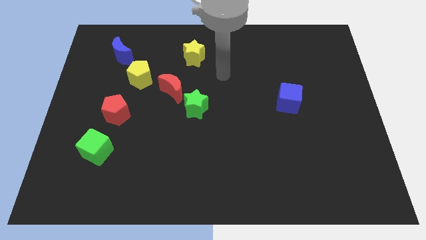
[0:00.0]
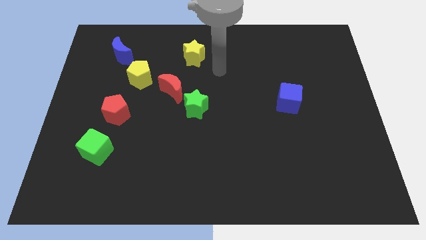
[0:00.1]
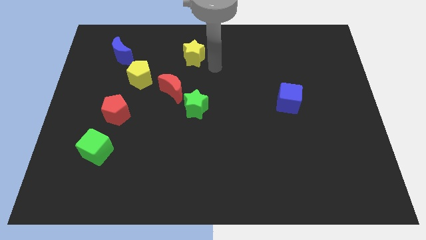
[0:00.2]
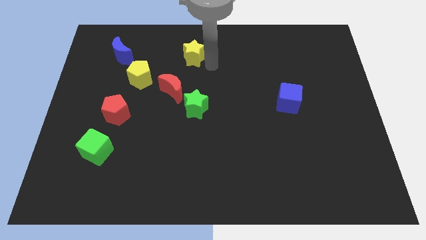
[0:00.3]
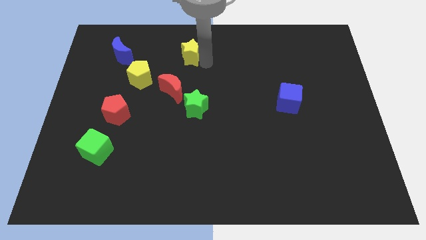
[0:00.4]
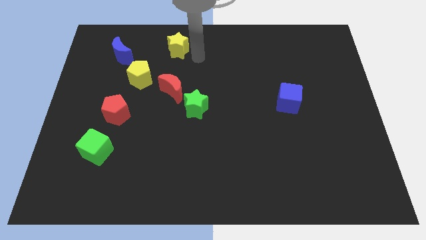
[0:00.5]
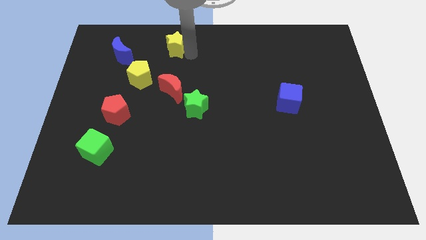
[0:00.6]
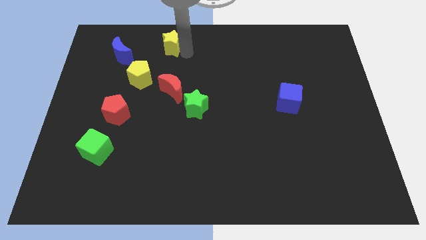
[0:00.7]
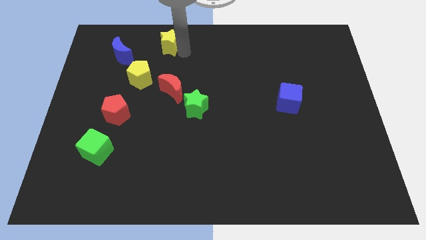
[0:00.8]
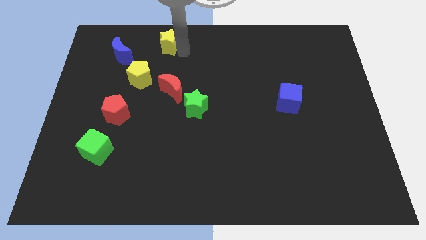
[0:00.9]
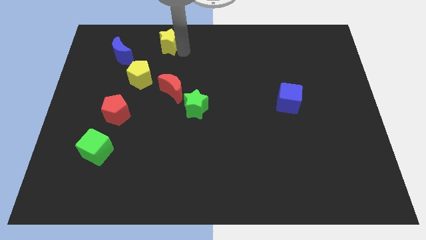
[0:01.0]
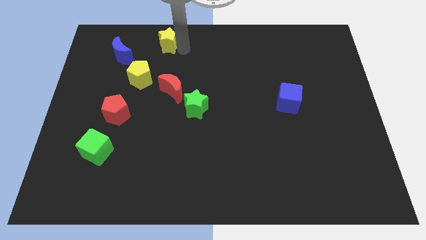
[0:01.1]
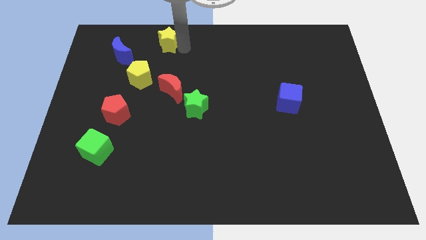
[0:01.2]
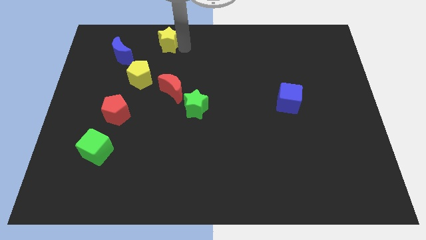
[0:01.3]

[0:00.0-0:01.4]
place the yellow star above the yellow pentagon

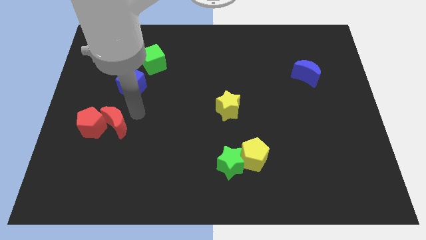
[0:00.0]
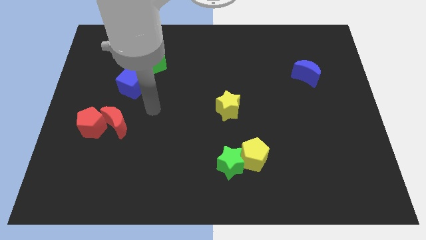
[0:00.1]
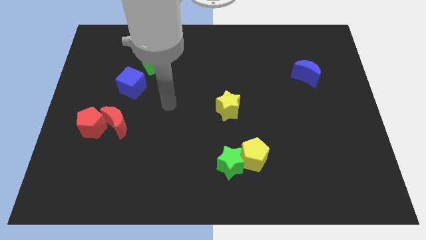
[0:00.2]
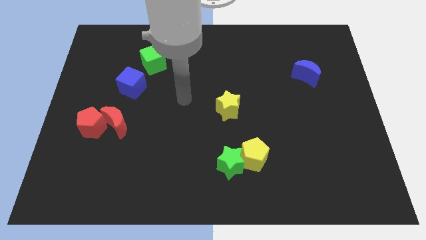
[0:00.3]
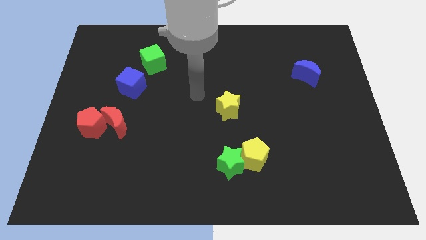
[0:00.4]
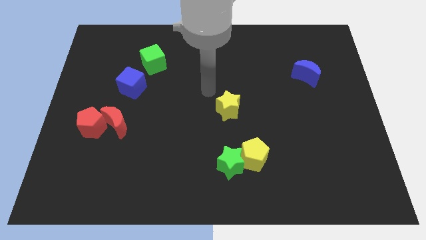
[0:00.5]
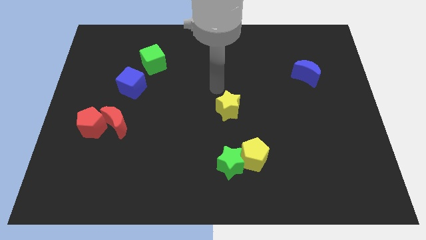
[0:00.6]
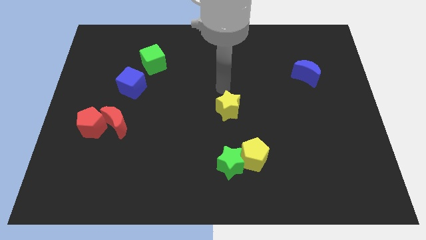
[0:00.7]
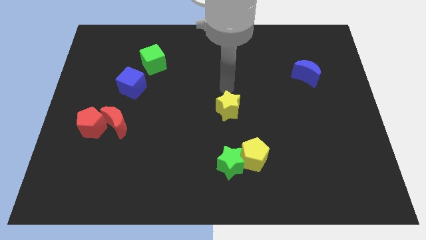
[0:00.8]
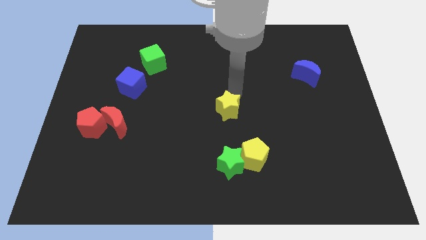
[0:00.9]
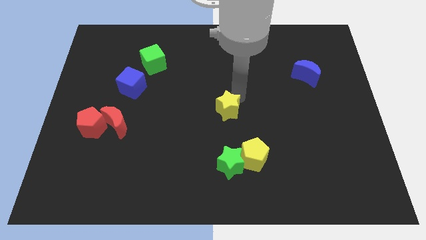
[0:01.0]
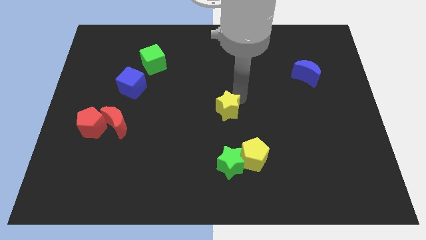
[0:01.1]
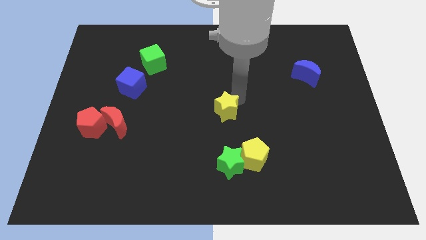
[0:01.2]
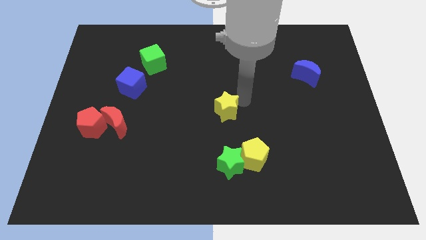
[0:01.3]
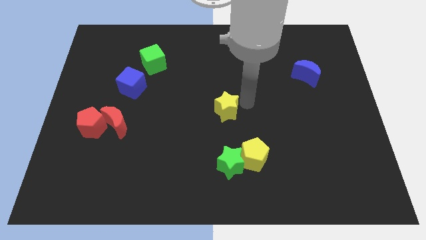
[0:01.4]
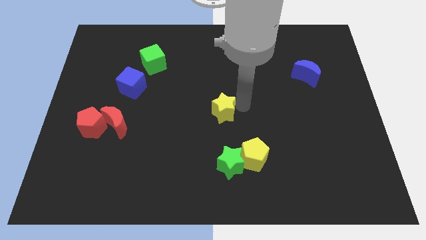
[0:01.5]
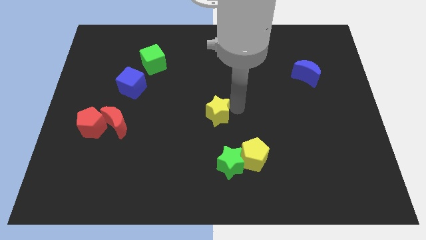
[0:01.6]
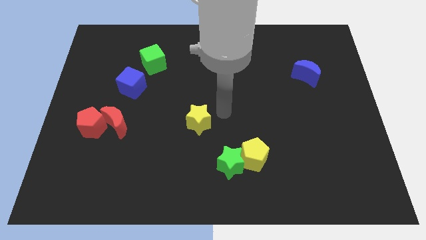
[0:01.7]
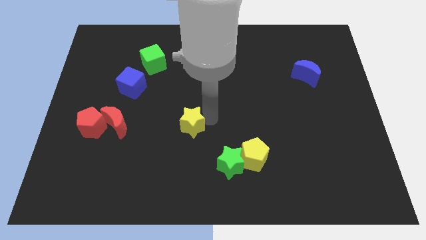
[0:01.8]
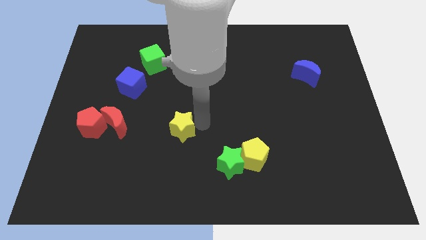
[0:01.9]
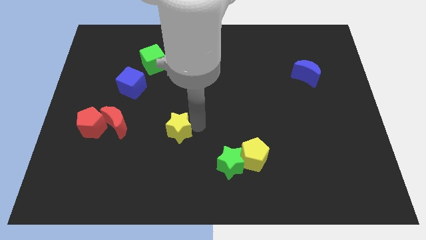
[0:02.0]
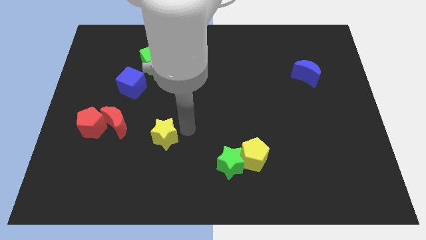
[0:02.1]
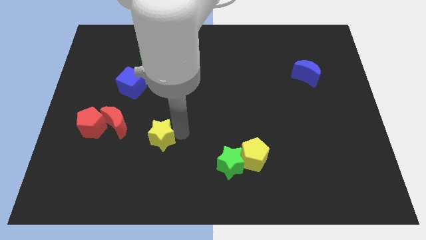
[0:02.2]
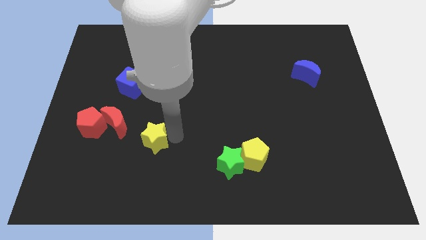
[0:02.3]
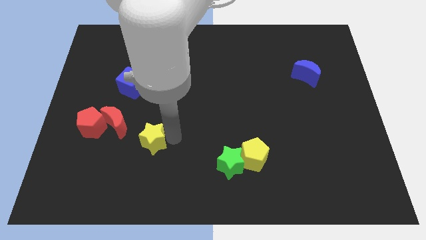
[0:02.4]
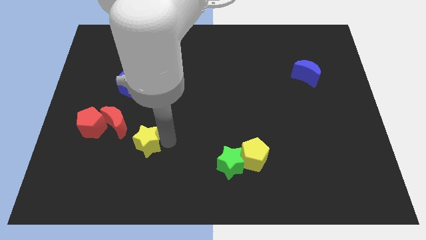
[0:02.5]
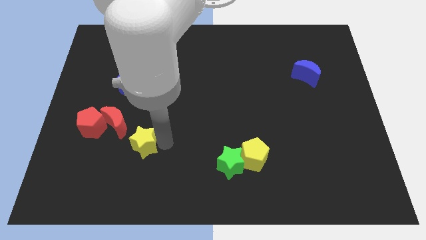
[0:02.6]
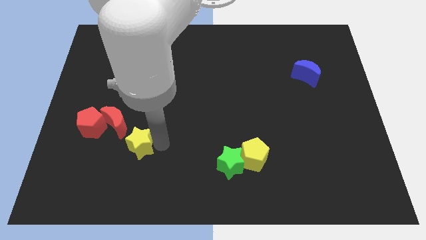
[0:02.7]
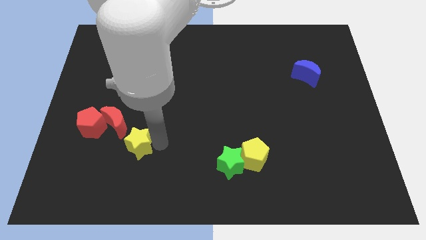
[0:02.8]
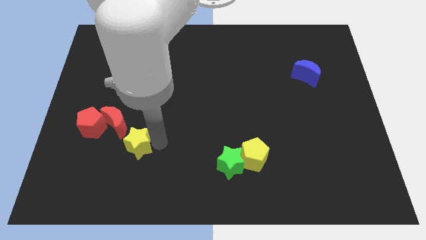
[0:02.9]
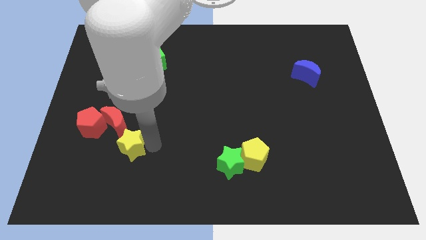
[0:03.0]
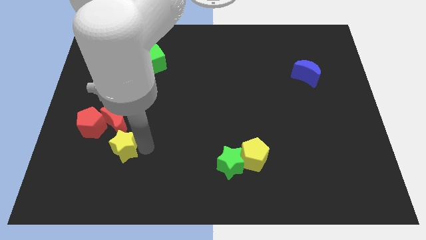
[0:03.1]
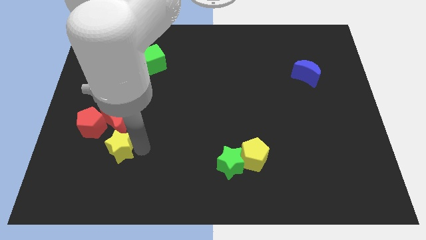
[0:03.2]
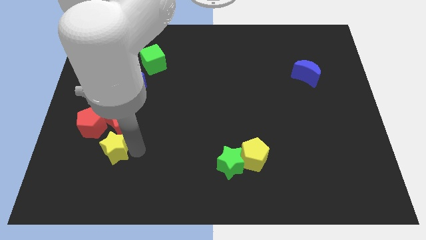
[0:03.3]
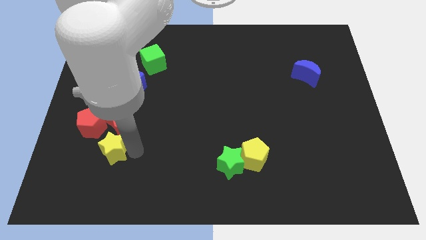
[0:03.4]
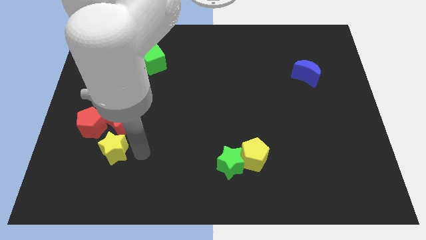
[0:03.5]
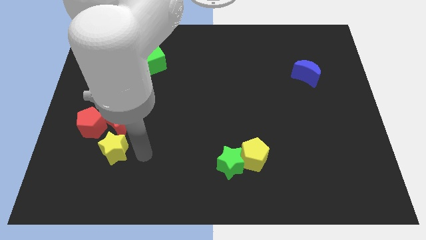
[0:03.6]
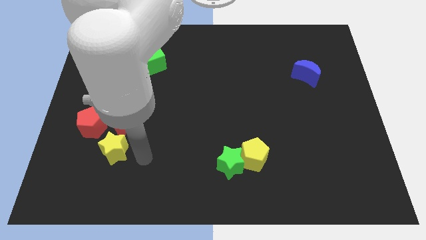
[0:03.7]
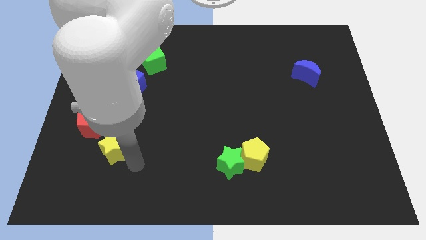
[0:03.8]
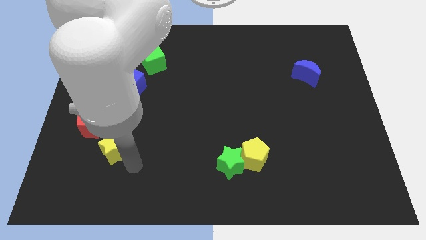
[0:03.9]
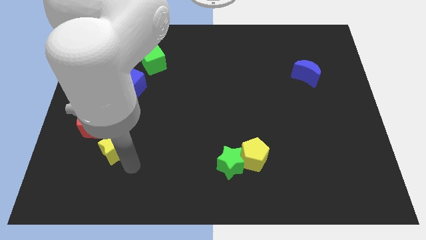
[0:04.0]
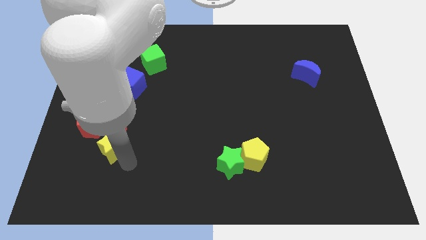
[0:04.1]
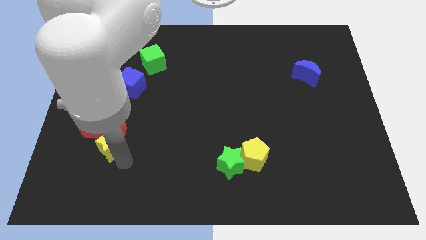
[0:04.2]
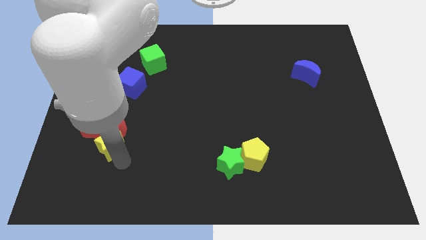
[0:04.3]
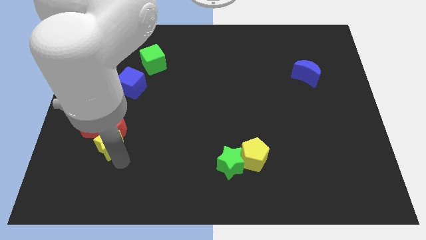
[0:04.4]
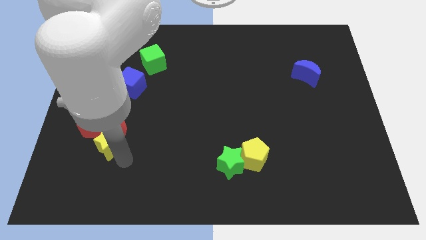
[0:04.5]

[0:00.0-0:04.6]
push the yellow star towards the bottom of the red crescent

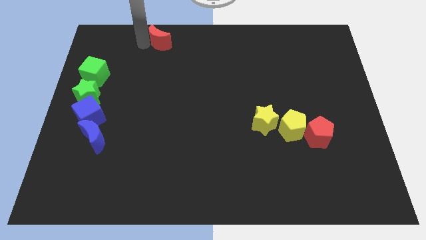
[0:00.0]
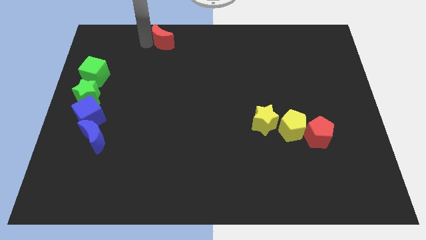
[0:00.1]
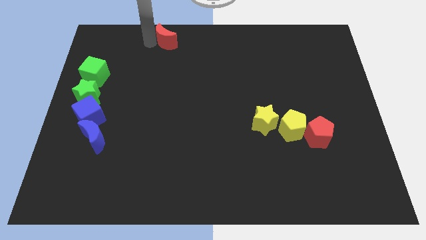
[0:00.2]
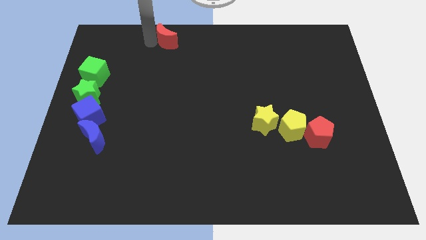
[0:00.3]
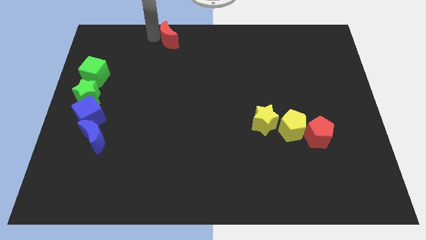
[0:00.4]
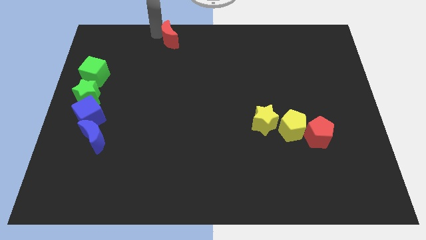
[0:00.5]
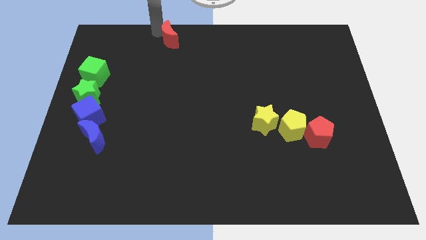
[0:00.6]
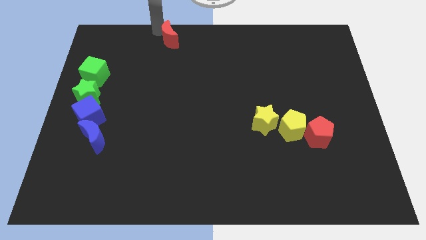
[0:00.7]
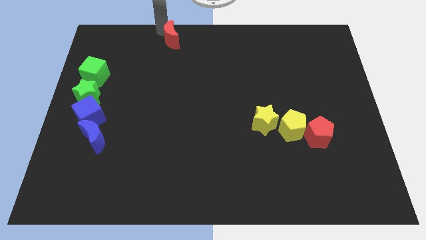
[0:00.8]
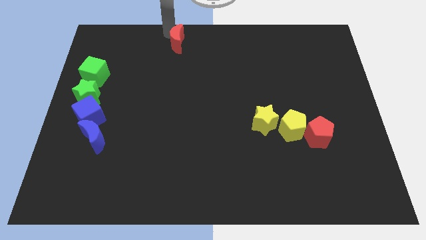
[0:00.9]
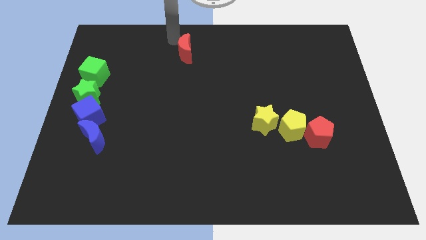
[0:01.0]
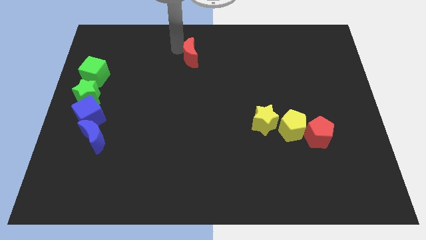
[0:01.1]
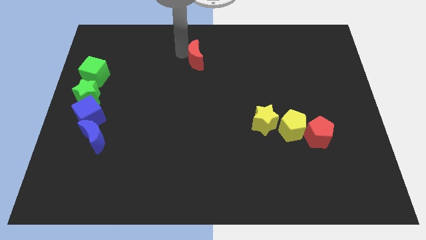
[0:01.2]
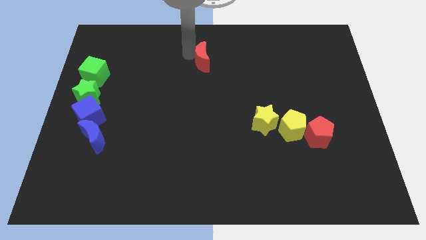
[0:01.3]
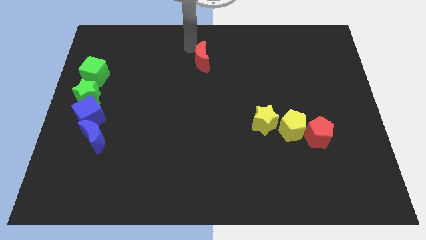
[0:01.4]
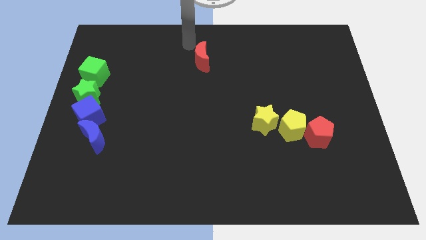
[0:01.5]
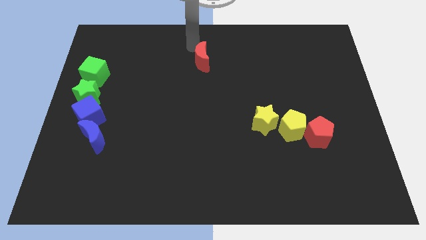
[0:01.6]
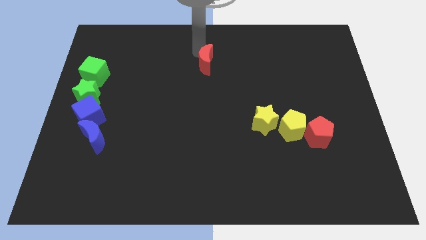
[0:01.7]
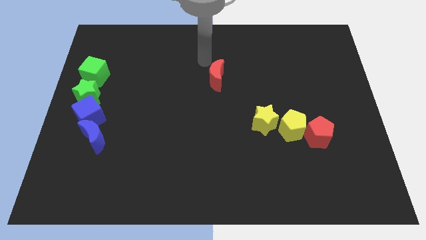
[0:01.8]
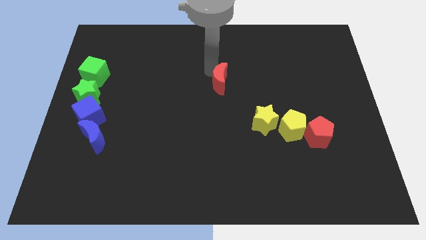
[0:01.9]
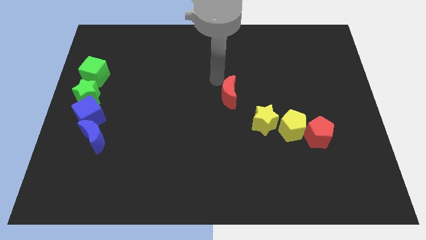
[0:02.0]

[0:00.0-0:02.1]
push the red crescent to the top left of the yellow star

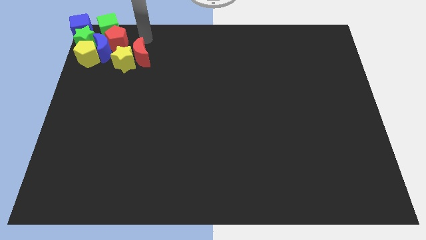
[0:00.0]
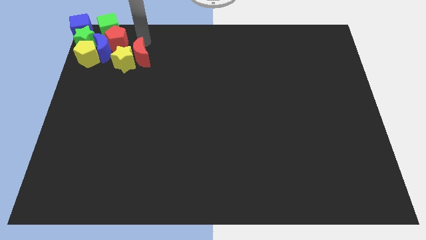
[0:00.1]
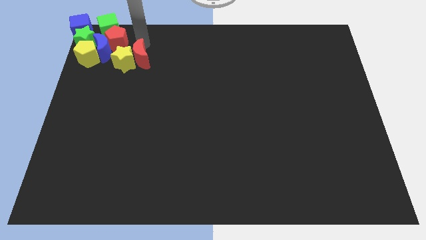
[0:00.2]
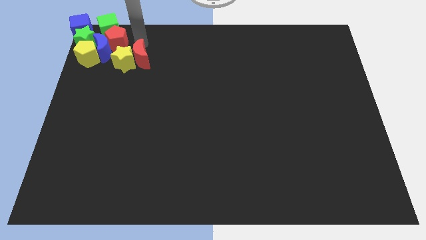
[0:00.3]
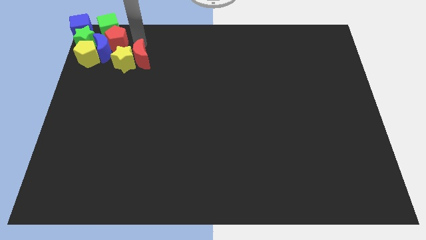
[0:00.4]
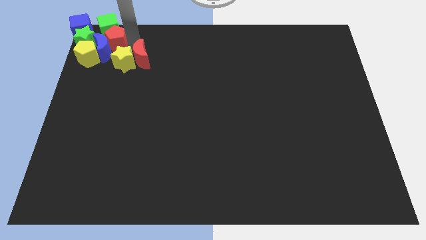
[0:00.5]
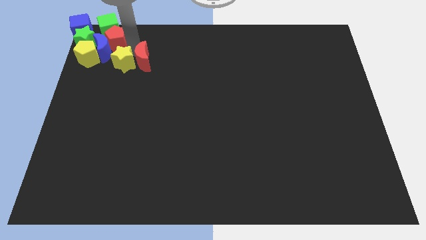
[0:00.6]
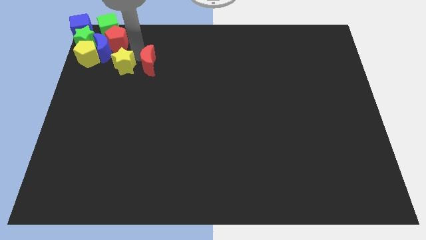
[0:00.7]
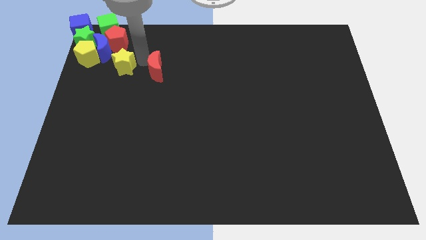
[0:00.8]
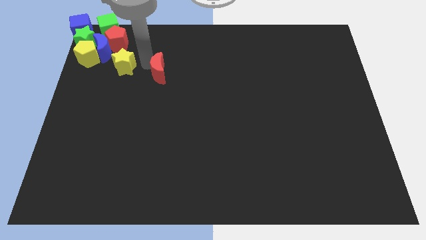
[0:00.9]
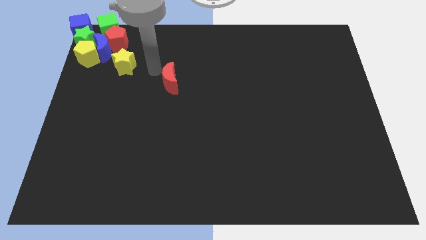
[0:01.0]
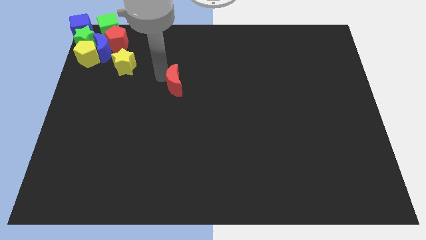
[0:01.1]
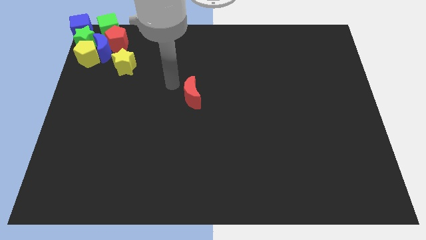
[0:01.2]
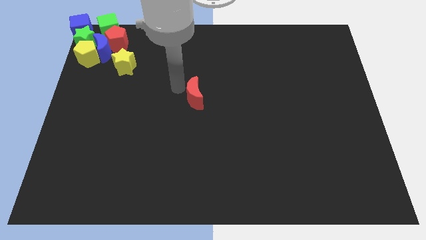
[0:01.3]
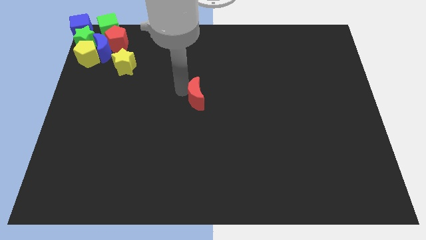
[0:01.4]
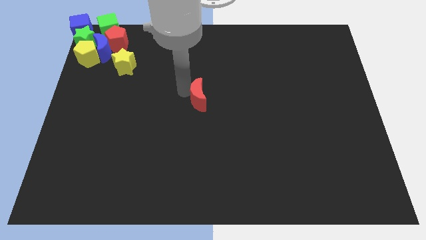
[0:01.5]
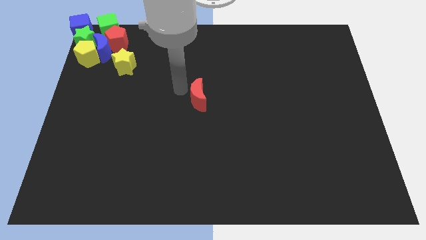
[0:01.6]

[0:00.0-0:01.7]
seperate the red moon from the group of blocks
